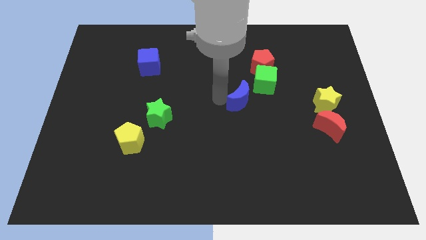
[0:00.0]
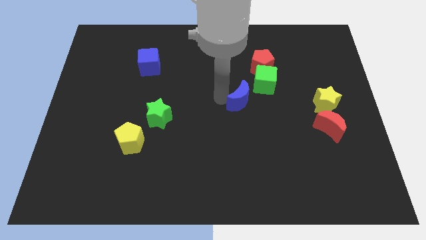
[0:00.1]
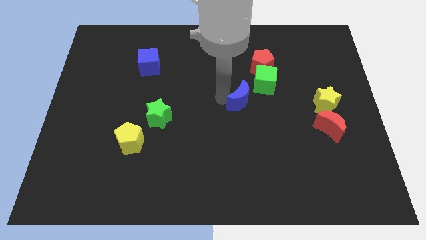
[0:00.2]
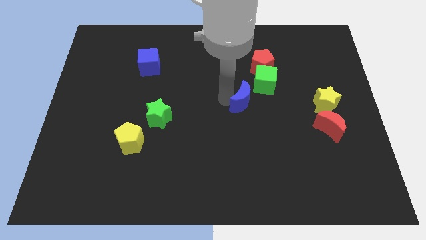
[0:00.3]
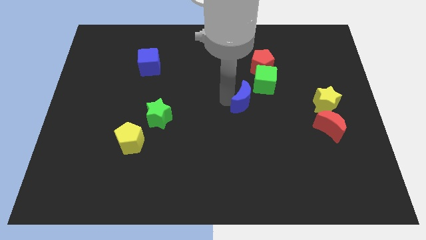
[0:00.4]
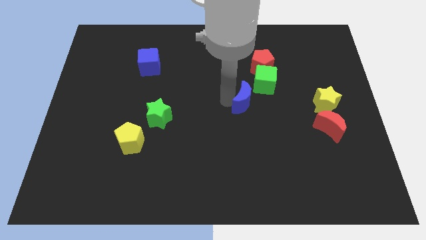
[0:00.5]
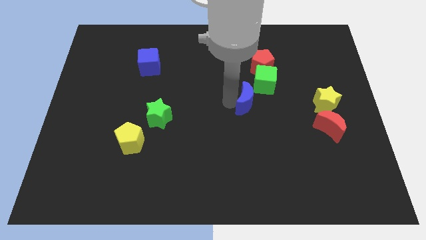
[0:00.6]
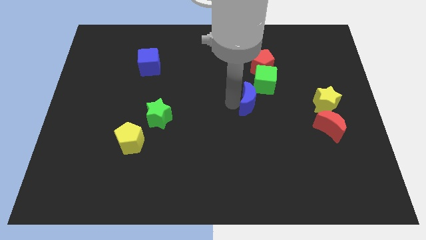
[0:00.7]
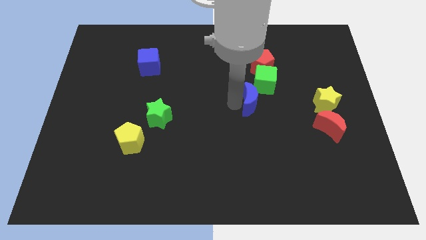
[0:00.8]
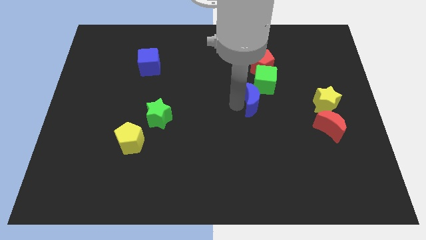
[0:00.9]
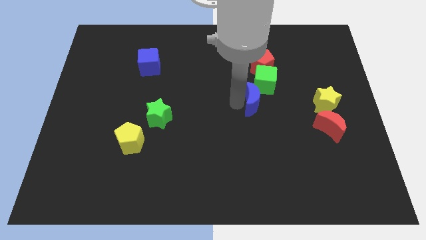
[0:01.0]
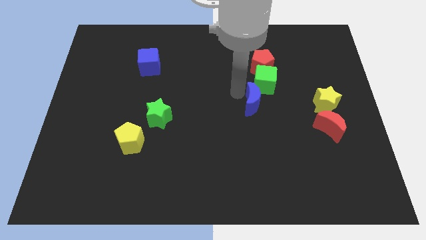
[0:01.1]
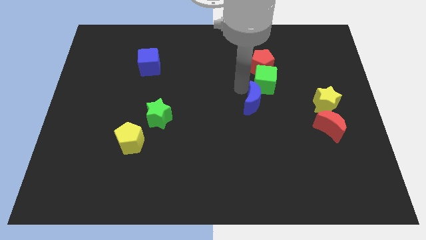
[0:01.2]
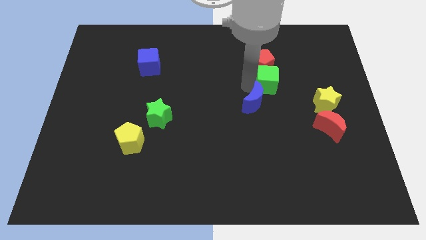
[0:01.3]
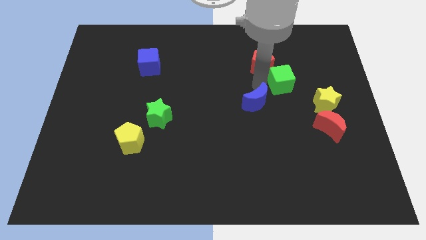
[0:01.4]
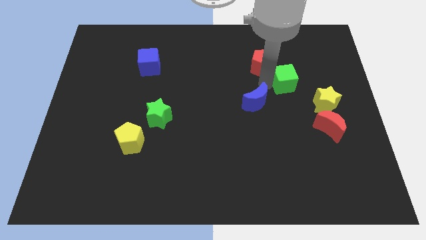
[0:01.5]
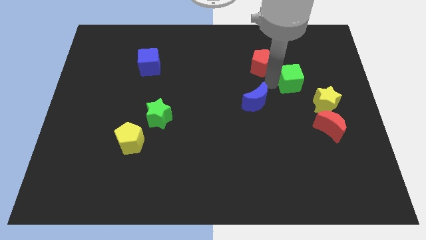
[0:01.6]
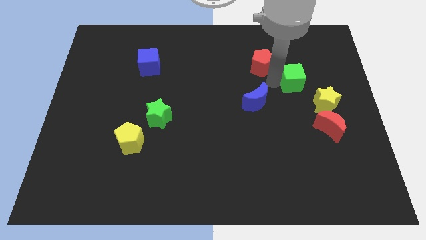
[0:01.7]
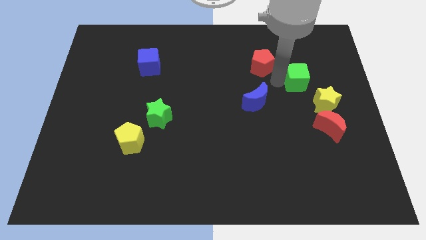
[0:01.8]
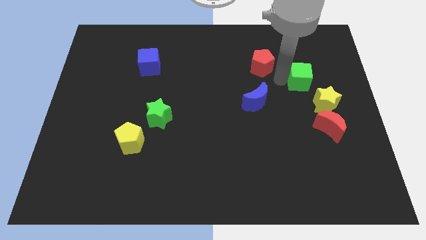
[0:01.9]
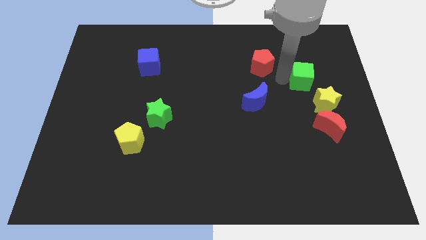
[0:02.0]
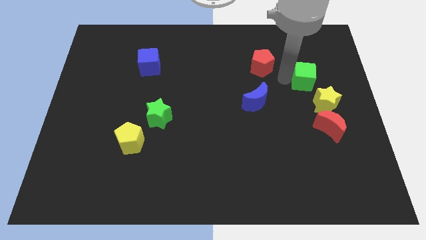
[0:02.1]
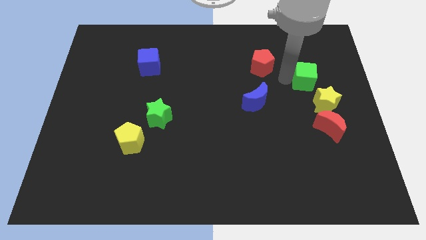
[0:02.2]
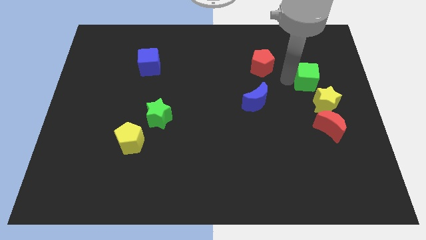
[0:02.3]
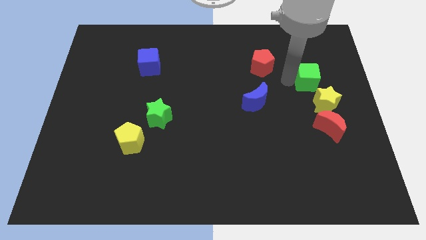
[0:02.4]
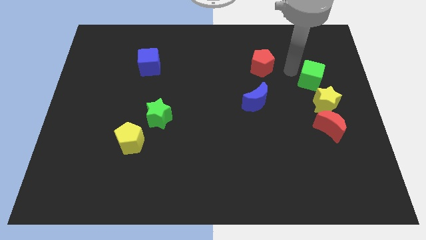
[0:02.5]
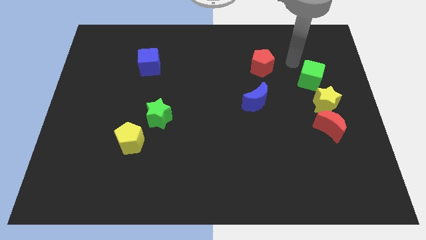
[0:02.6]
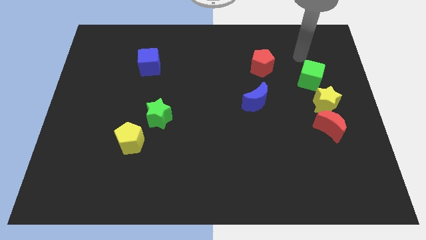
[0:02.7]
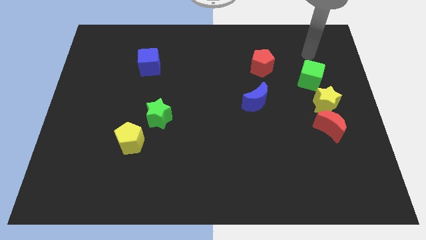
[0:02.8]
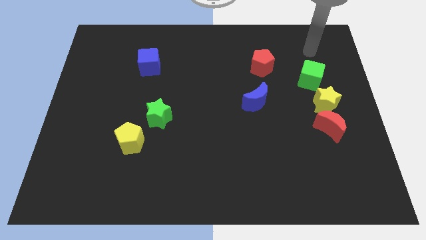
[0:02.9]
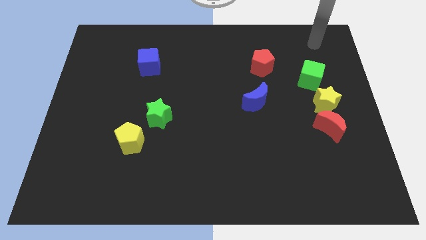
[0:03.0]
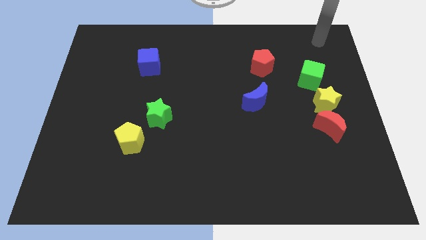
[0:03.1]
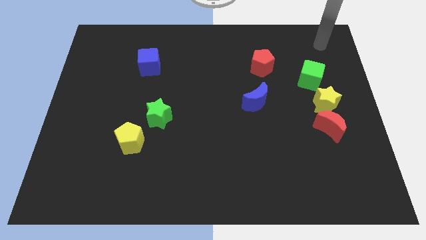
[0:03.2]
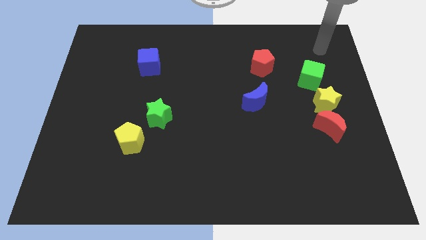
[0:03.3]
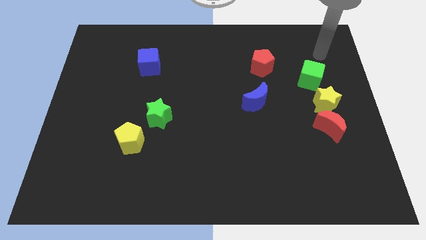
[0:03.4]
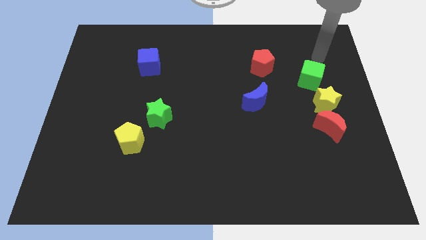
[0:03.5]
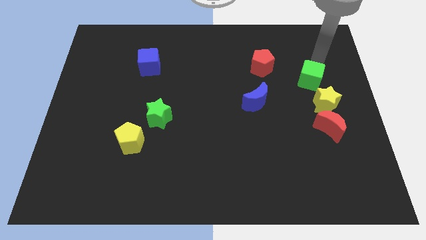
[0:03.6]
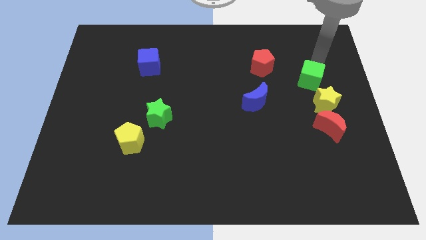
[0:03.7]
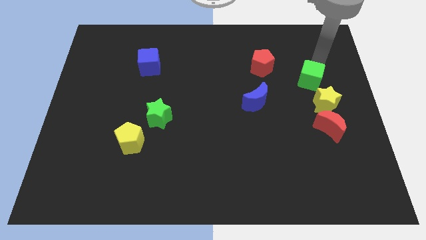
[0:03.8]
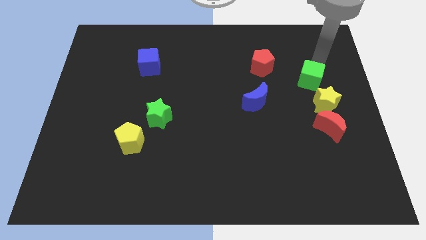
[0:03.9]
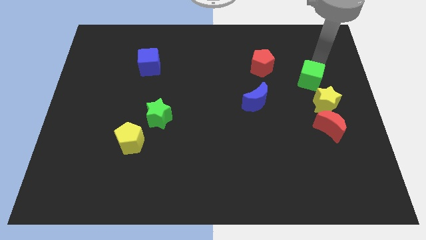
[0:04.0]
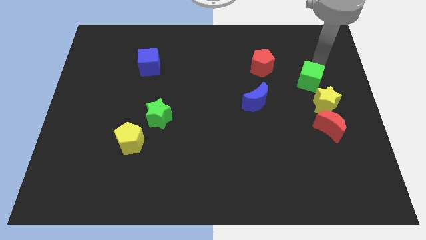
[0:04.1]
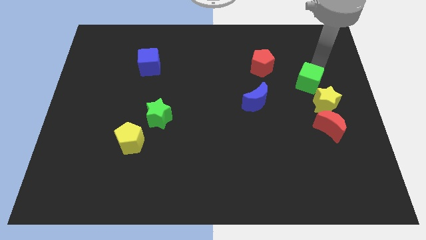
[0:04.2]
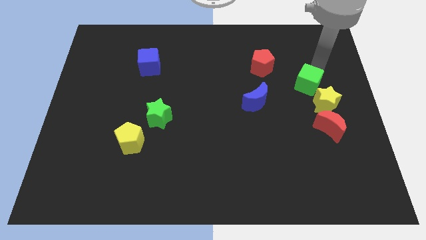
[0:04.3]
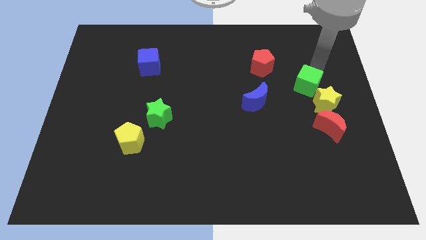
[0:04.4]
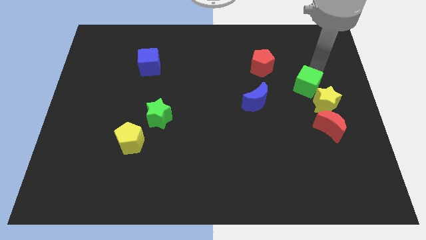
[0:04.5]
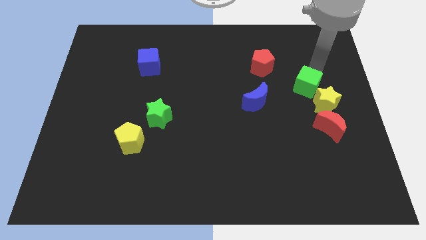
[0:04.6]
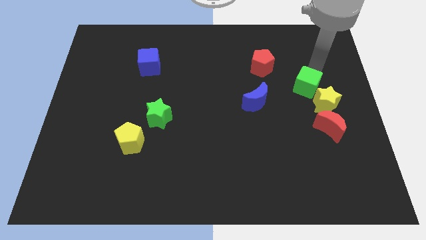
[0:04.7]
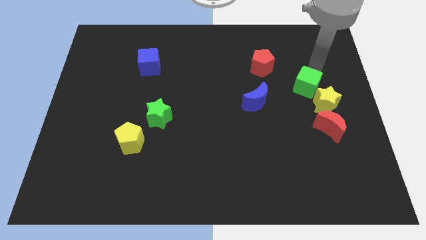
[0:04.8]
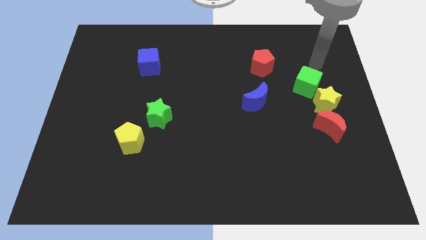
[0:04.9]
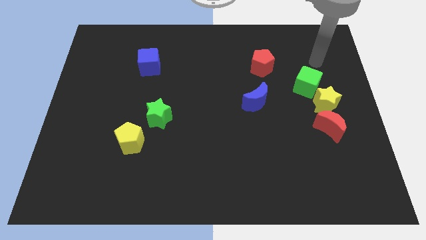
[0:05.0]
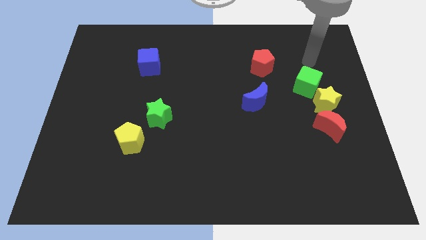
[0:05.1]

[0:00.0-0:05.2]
push the green cube to the right

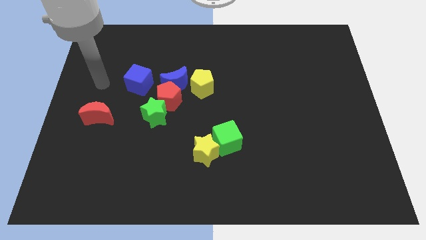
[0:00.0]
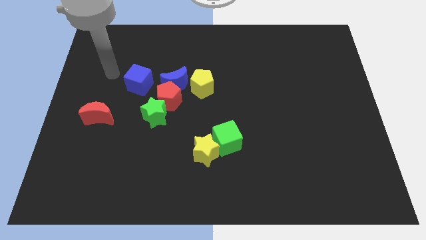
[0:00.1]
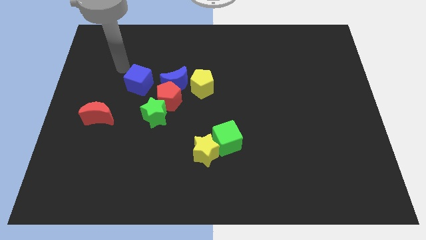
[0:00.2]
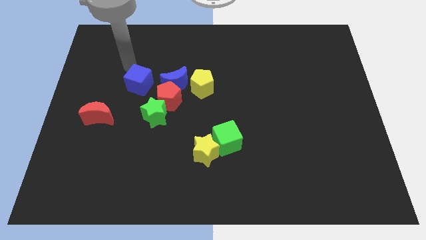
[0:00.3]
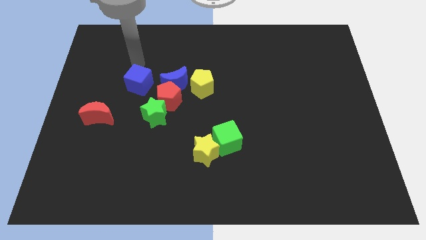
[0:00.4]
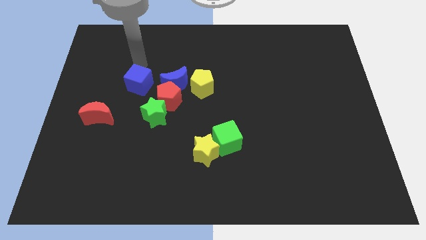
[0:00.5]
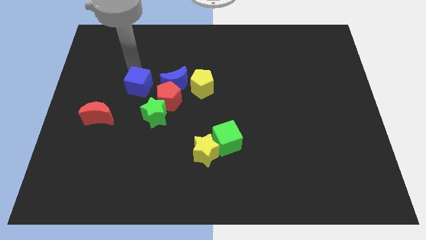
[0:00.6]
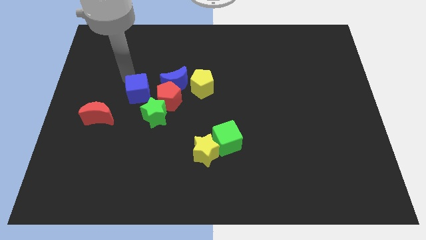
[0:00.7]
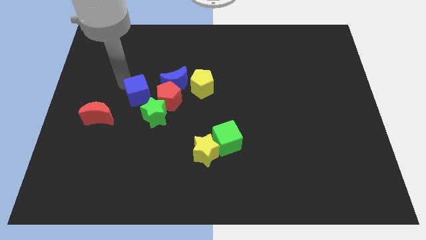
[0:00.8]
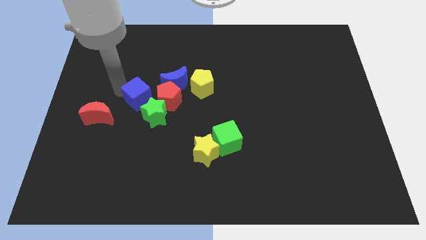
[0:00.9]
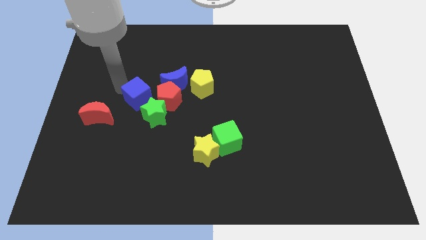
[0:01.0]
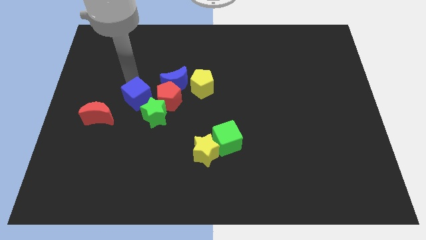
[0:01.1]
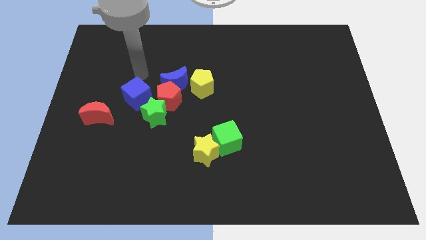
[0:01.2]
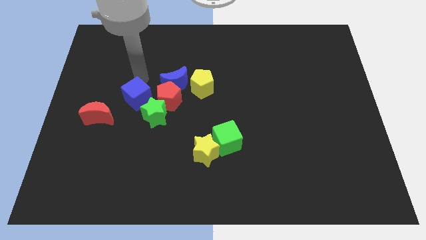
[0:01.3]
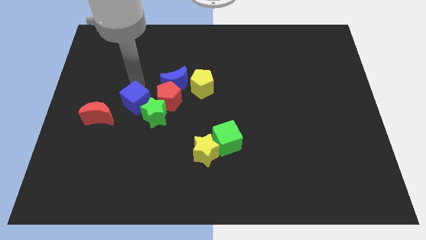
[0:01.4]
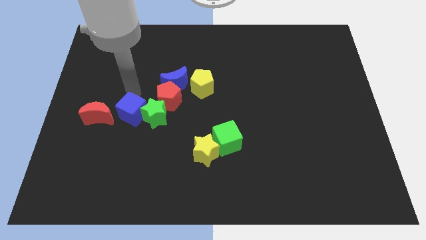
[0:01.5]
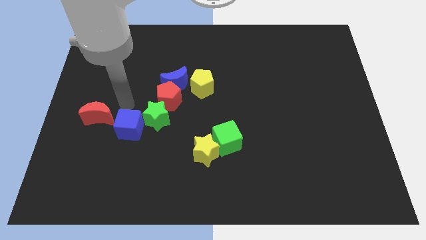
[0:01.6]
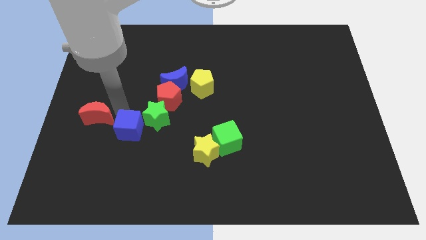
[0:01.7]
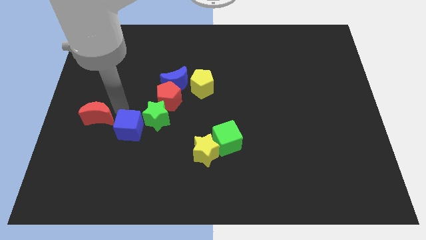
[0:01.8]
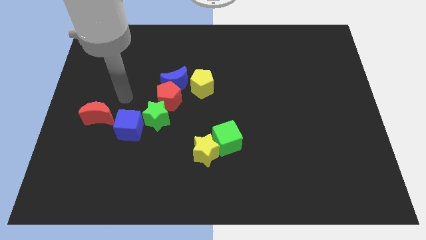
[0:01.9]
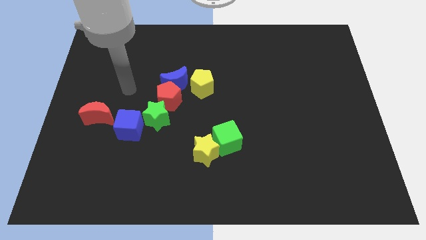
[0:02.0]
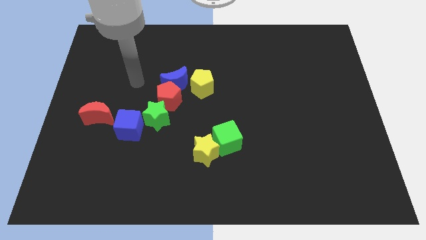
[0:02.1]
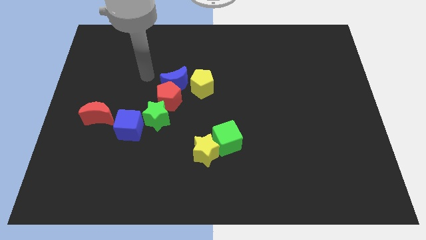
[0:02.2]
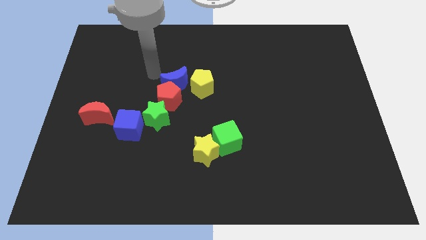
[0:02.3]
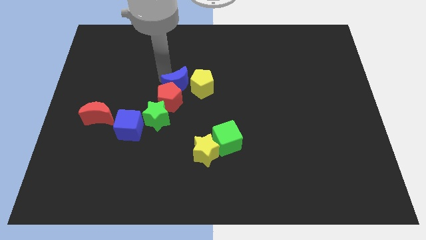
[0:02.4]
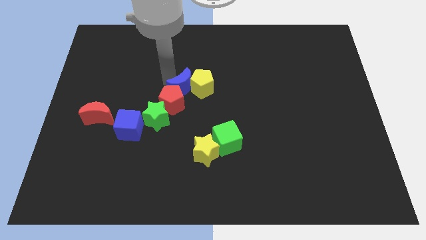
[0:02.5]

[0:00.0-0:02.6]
push the blue cube in between red moon and green star

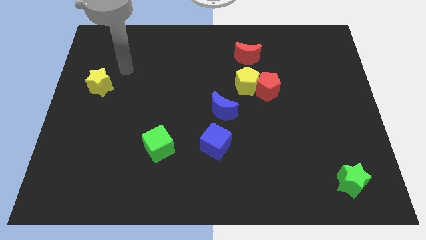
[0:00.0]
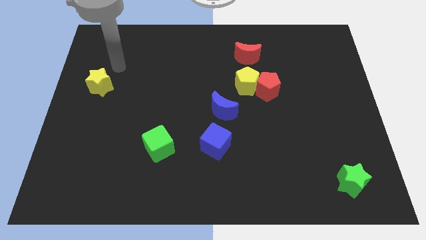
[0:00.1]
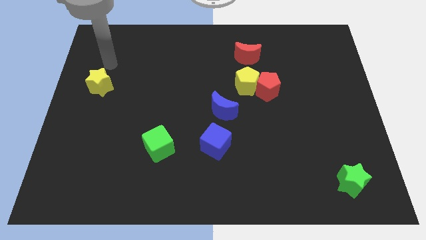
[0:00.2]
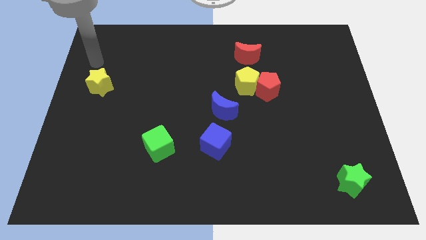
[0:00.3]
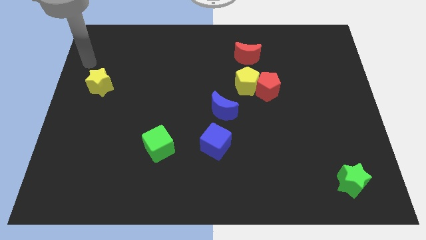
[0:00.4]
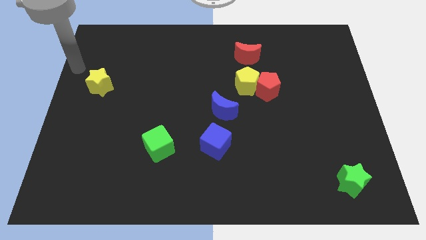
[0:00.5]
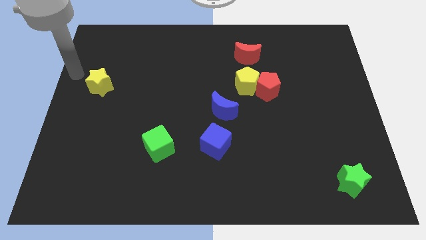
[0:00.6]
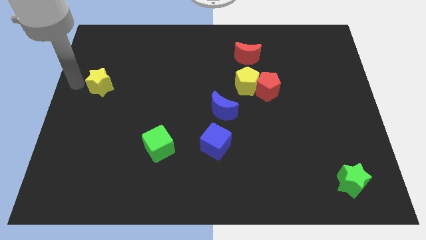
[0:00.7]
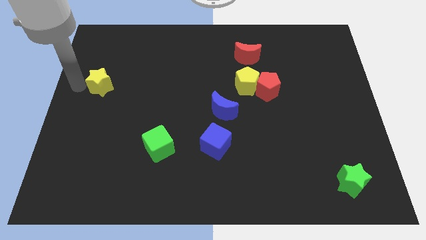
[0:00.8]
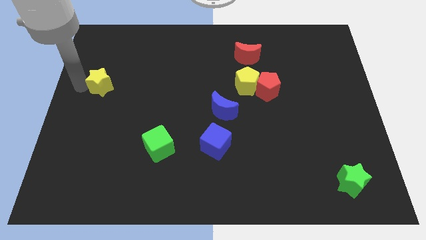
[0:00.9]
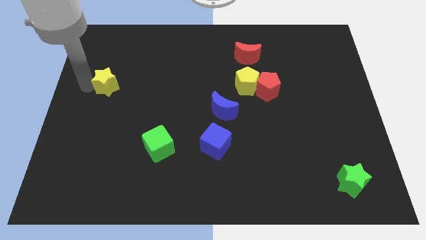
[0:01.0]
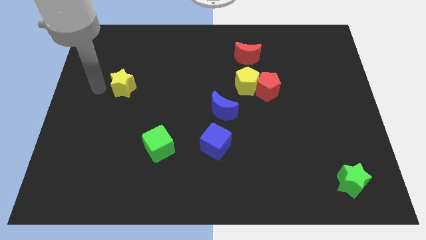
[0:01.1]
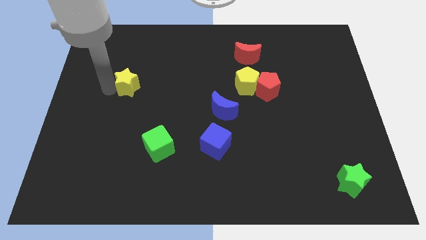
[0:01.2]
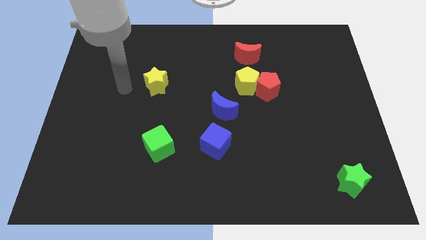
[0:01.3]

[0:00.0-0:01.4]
place the yellow star above the green cube
